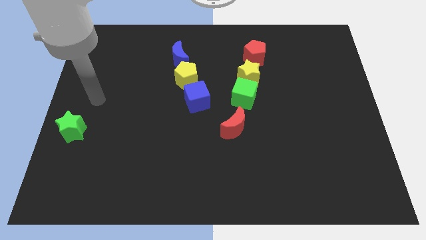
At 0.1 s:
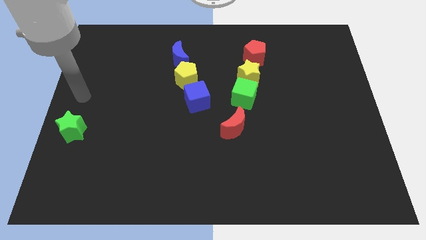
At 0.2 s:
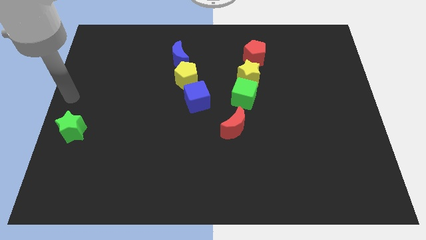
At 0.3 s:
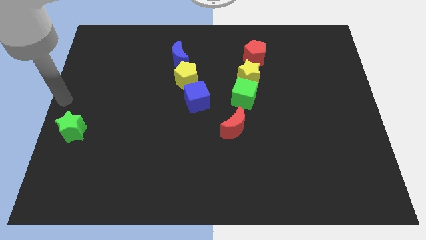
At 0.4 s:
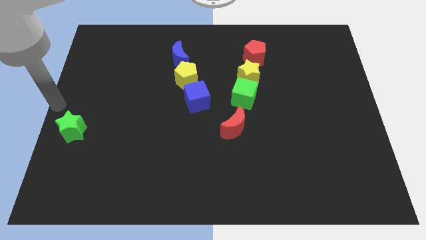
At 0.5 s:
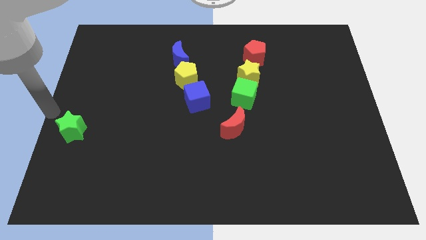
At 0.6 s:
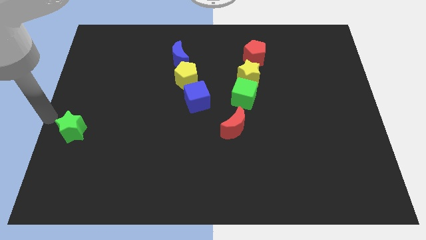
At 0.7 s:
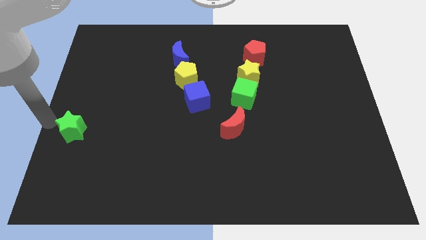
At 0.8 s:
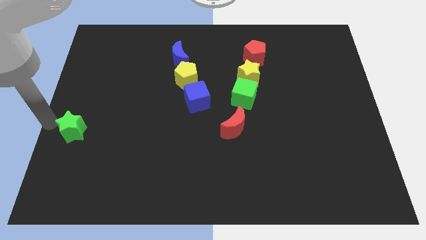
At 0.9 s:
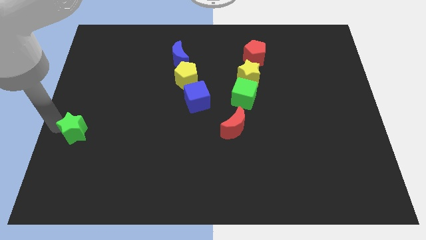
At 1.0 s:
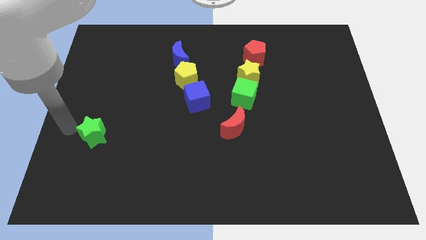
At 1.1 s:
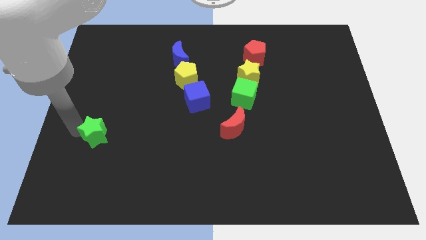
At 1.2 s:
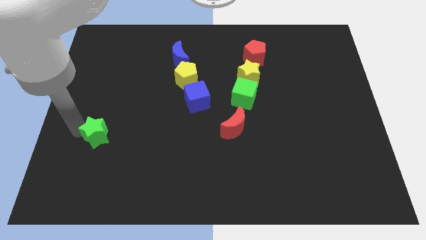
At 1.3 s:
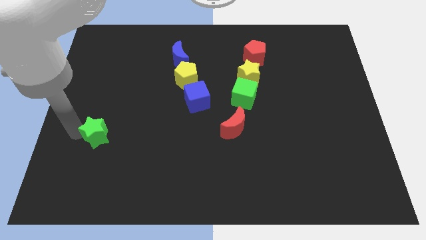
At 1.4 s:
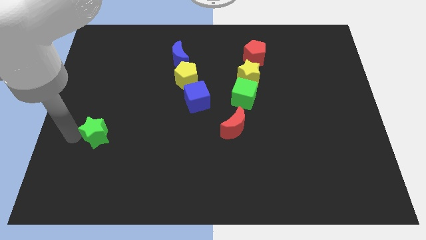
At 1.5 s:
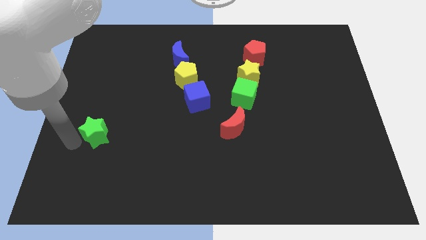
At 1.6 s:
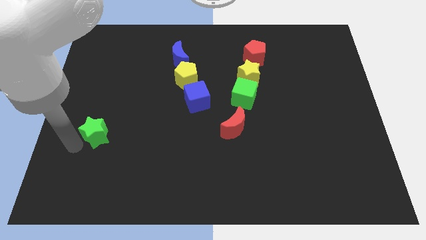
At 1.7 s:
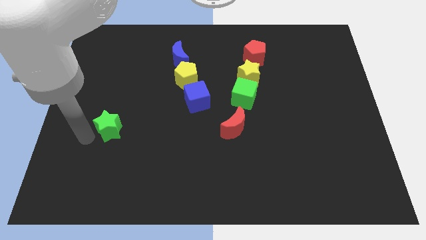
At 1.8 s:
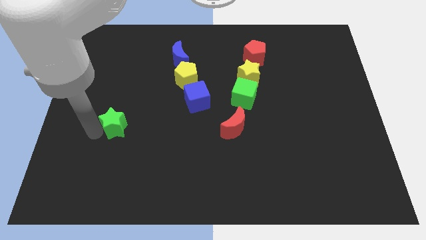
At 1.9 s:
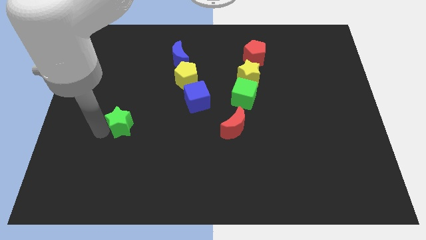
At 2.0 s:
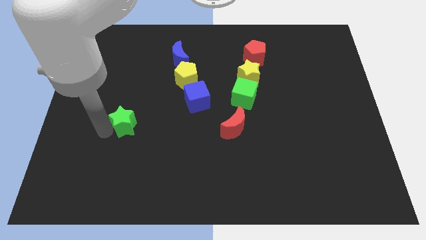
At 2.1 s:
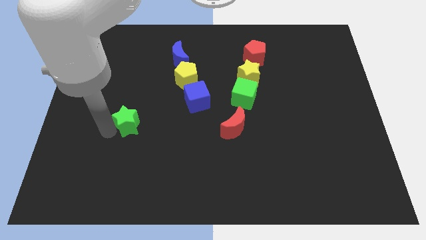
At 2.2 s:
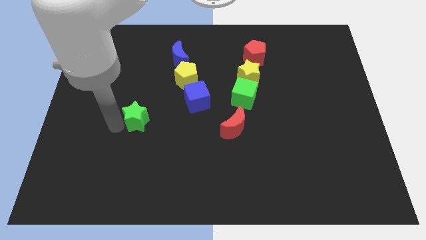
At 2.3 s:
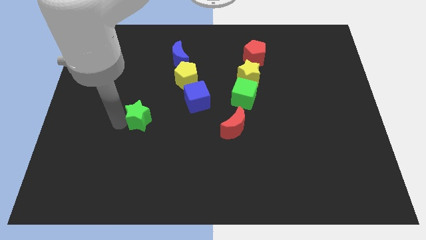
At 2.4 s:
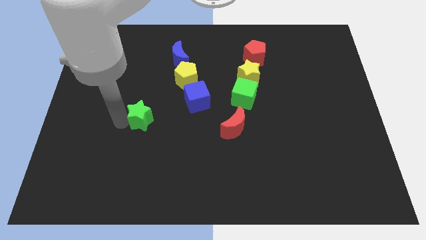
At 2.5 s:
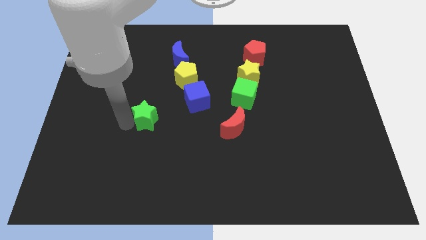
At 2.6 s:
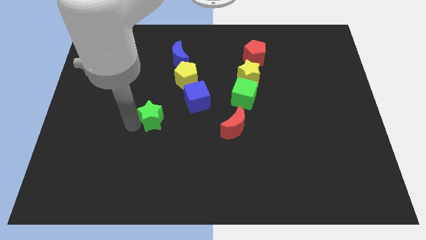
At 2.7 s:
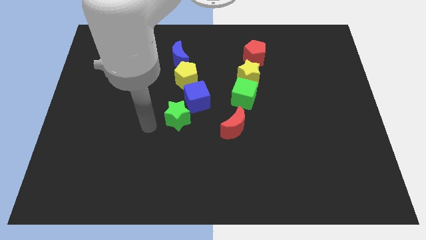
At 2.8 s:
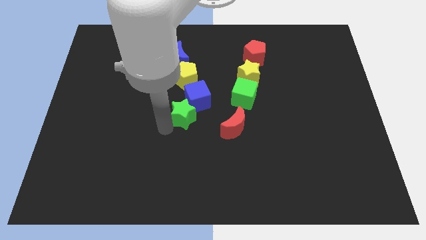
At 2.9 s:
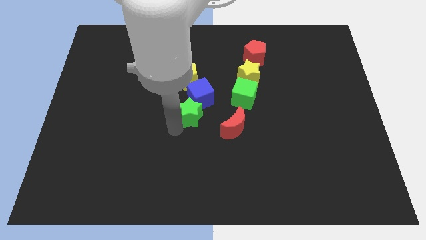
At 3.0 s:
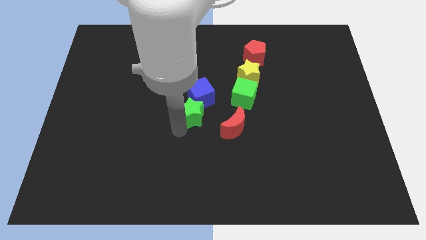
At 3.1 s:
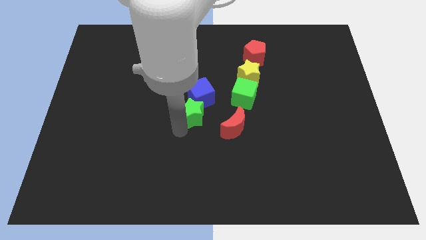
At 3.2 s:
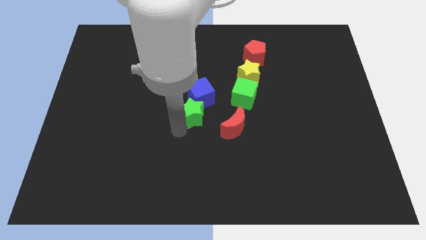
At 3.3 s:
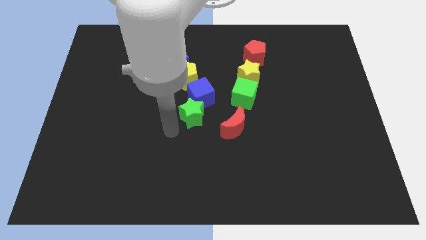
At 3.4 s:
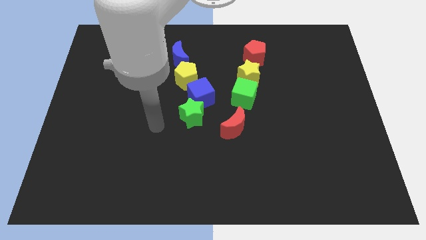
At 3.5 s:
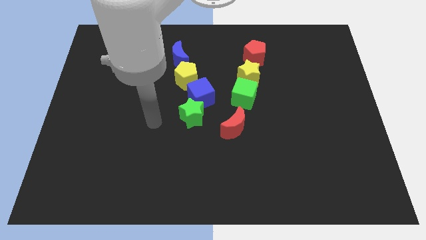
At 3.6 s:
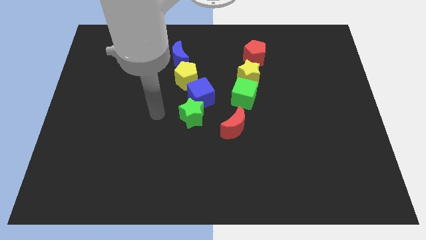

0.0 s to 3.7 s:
push the green star close to the blue cube

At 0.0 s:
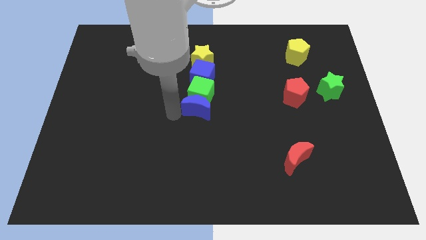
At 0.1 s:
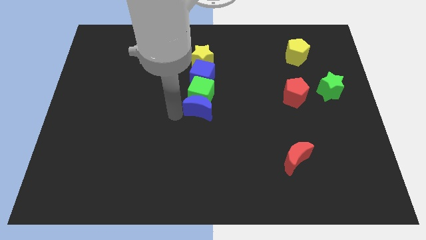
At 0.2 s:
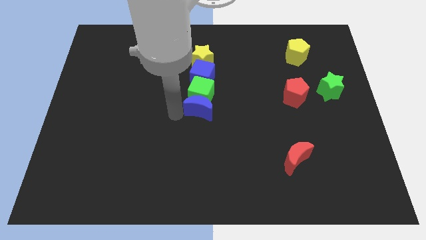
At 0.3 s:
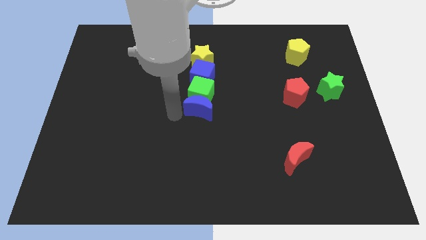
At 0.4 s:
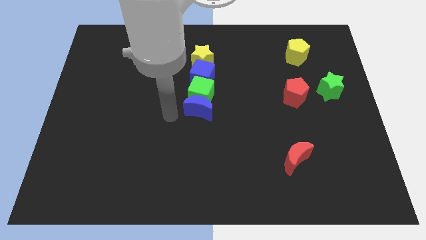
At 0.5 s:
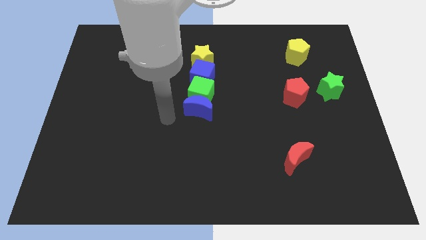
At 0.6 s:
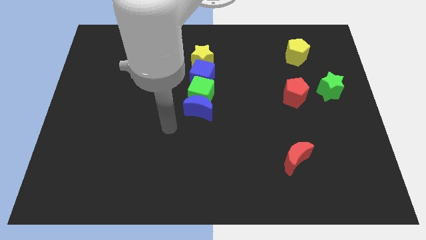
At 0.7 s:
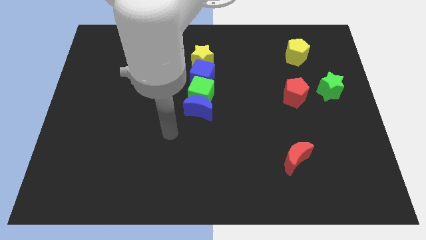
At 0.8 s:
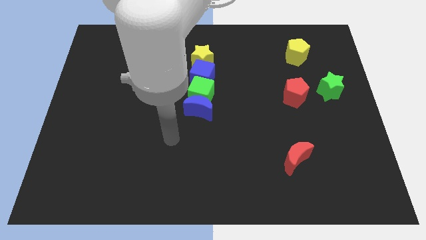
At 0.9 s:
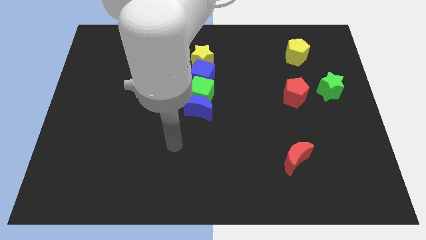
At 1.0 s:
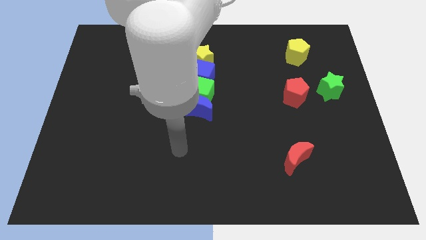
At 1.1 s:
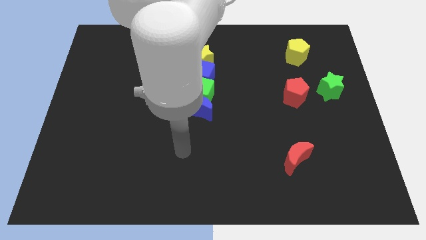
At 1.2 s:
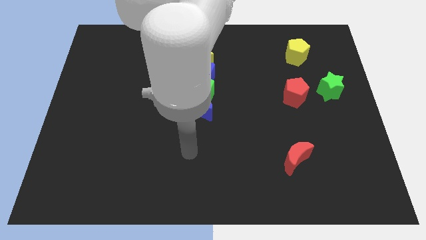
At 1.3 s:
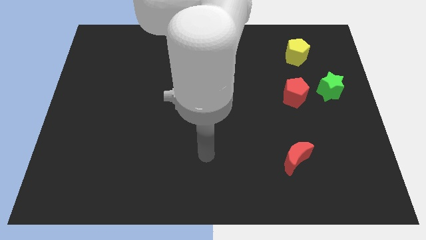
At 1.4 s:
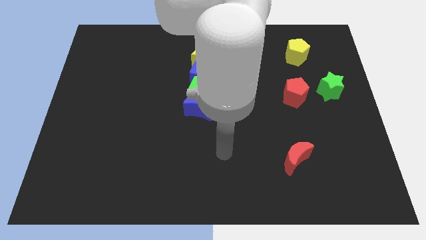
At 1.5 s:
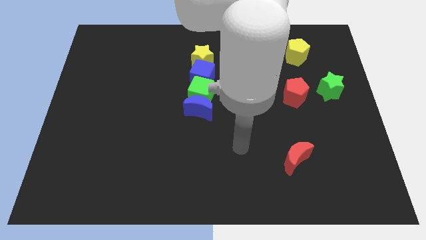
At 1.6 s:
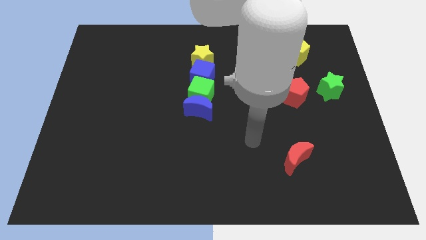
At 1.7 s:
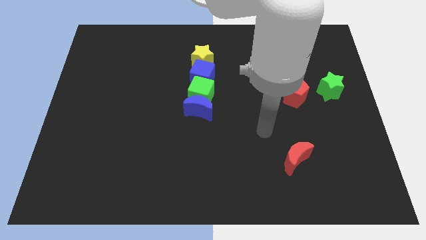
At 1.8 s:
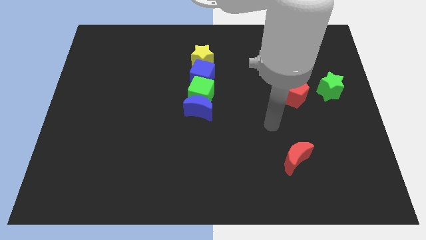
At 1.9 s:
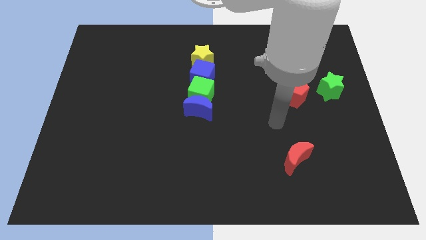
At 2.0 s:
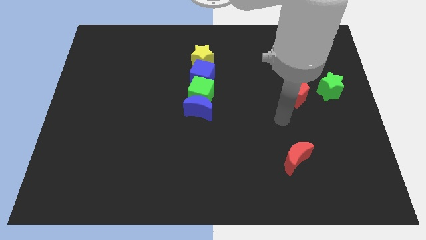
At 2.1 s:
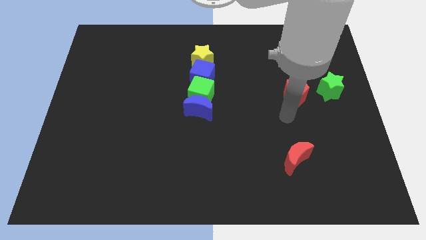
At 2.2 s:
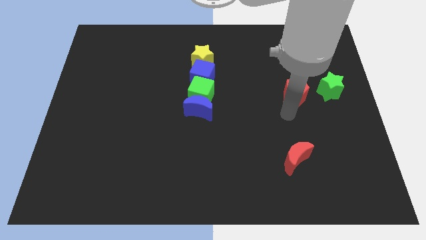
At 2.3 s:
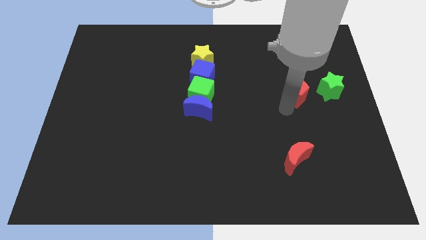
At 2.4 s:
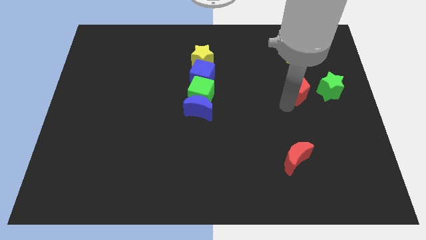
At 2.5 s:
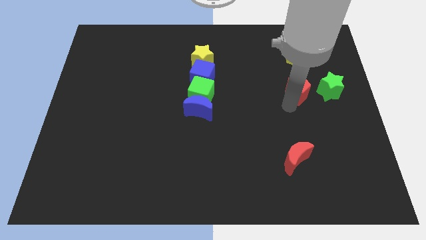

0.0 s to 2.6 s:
go away from the blue moon

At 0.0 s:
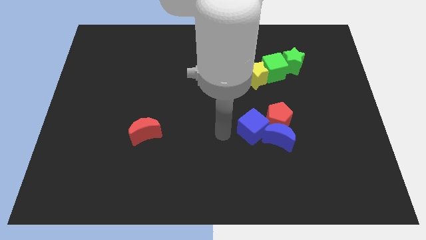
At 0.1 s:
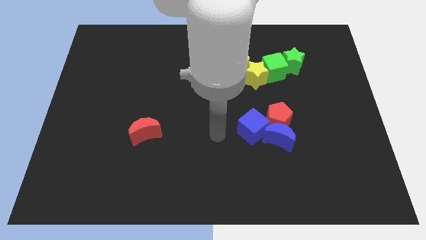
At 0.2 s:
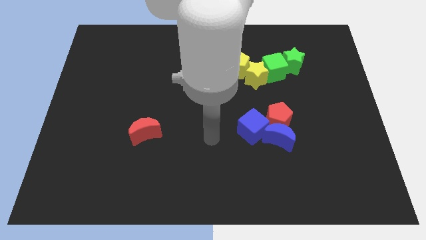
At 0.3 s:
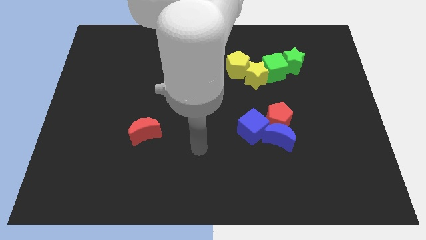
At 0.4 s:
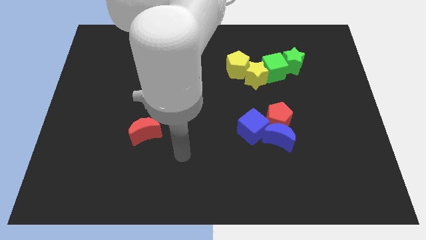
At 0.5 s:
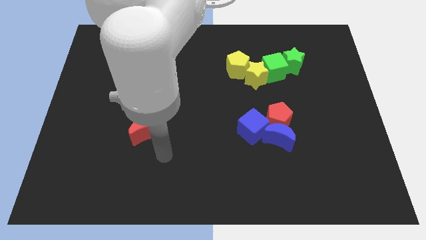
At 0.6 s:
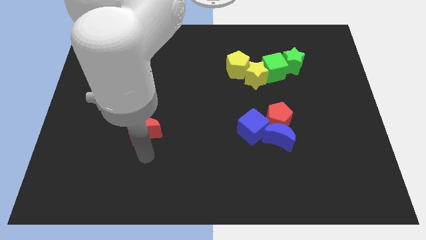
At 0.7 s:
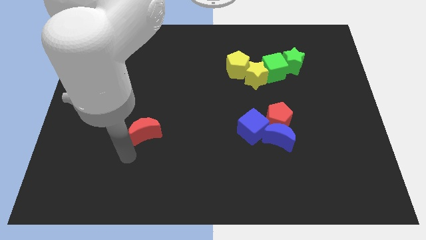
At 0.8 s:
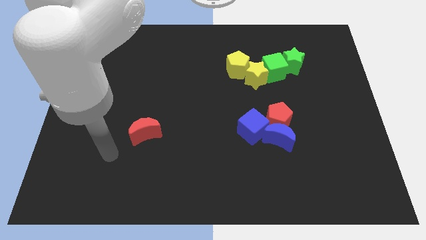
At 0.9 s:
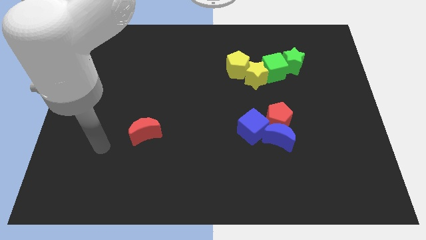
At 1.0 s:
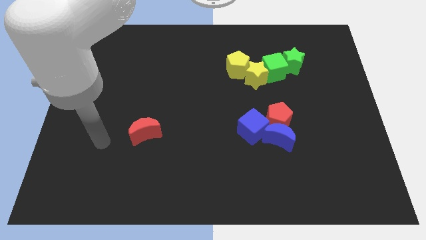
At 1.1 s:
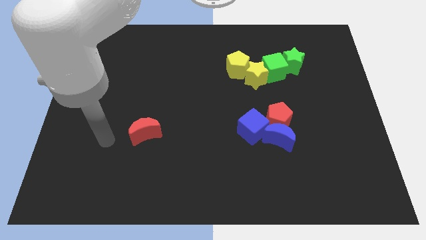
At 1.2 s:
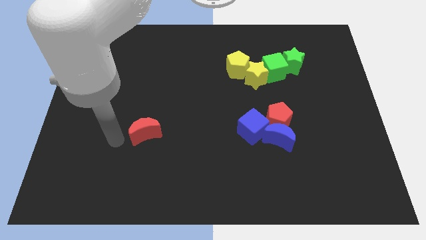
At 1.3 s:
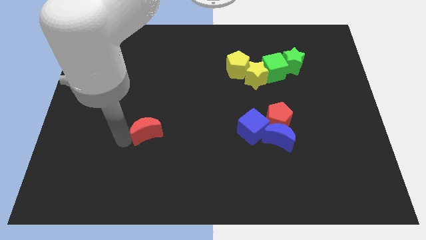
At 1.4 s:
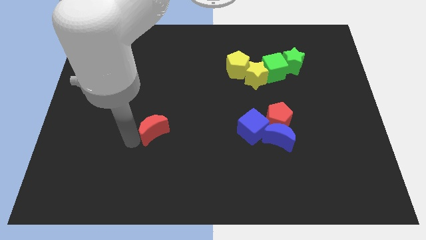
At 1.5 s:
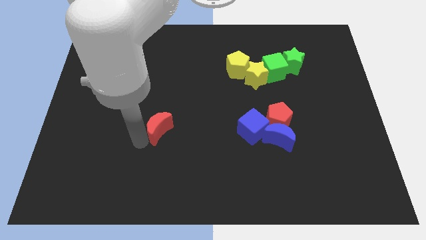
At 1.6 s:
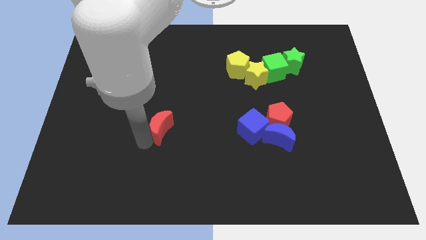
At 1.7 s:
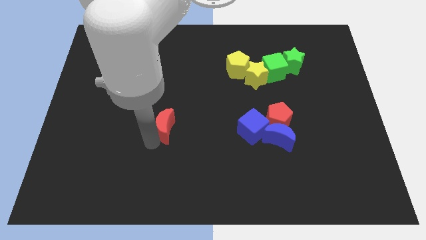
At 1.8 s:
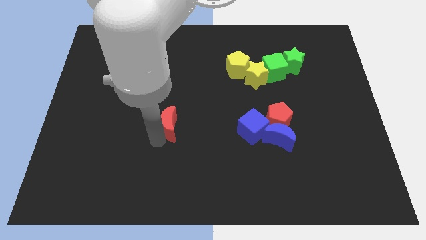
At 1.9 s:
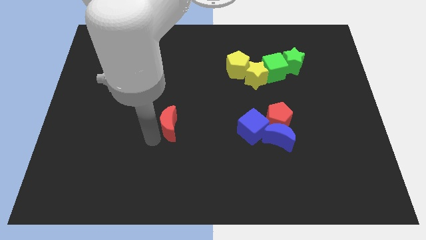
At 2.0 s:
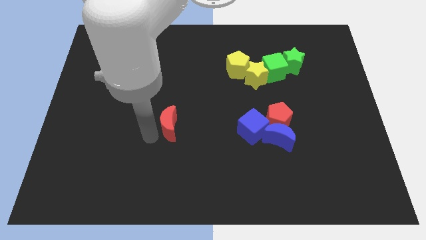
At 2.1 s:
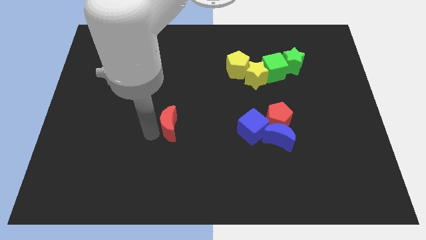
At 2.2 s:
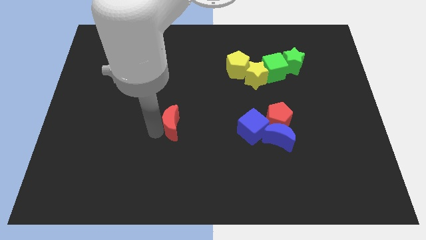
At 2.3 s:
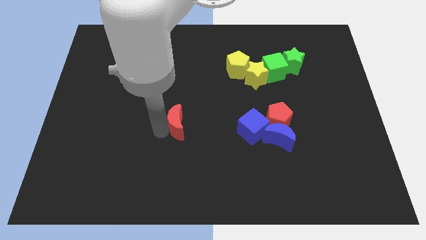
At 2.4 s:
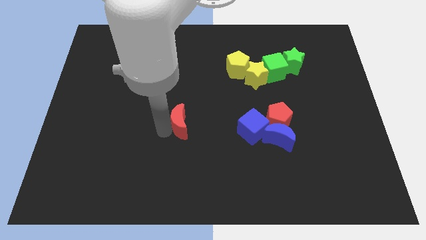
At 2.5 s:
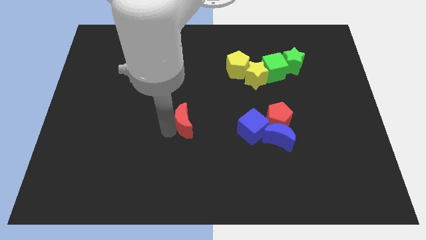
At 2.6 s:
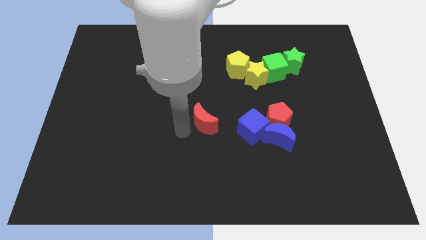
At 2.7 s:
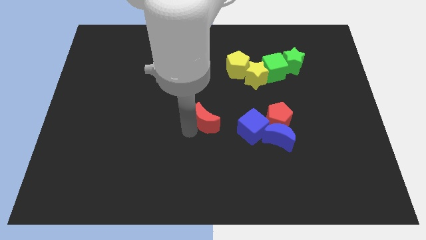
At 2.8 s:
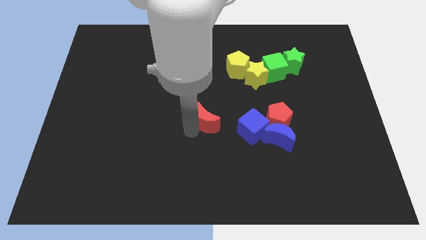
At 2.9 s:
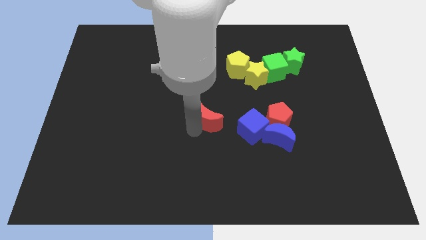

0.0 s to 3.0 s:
move the red crescent to the center of the board
